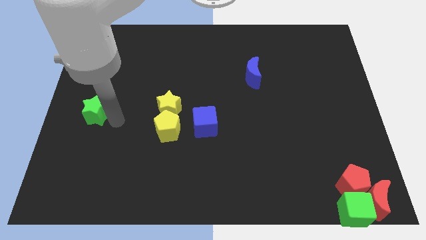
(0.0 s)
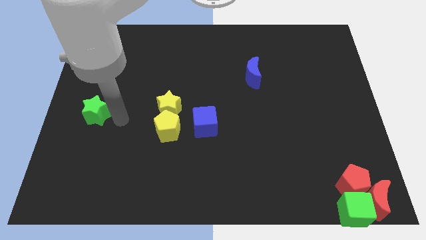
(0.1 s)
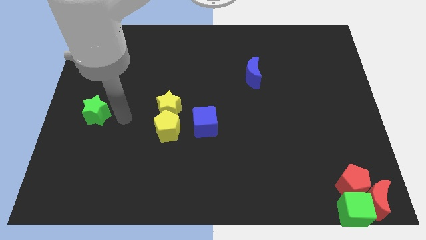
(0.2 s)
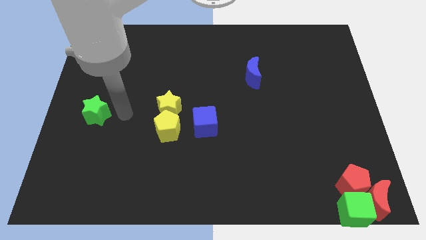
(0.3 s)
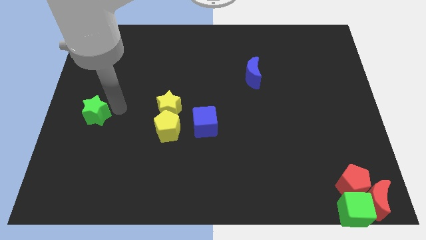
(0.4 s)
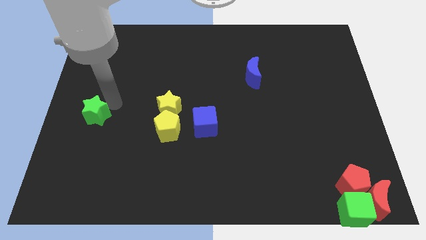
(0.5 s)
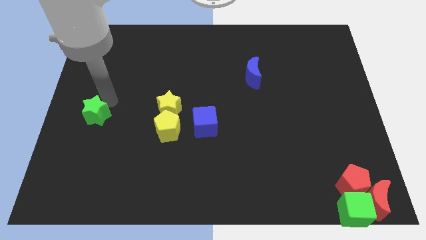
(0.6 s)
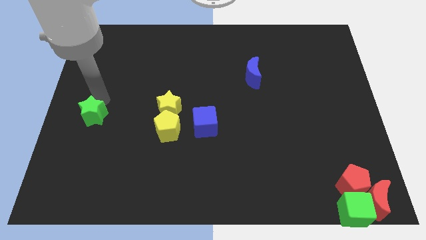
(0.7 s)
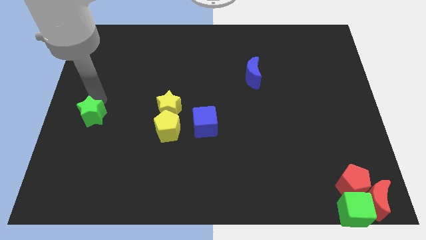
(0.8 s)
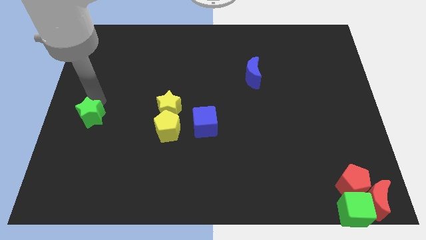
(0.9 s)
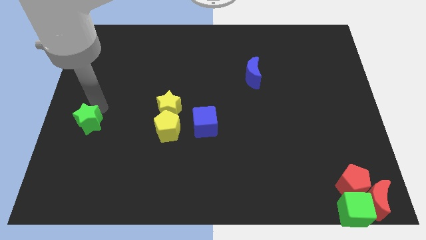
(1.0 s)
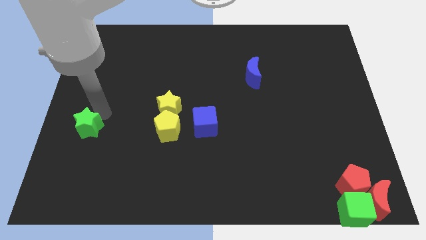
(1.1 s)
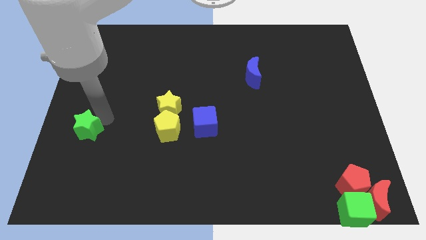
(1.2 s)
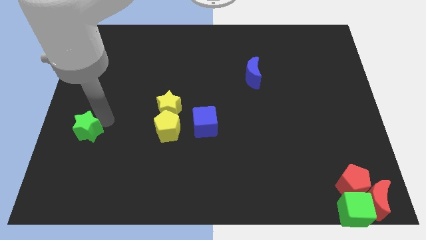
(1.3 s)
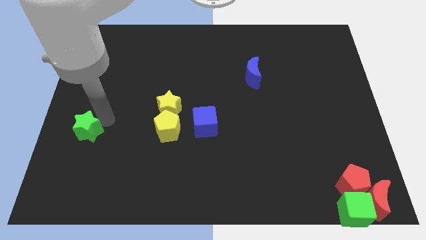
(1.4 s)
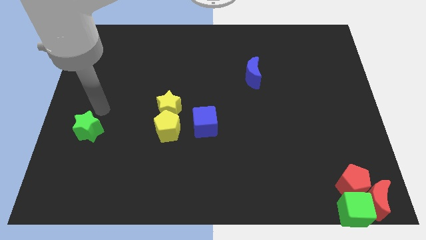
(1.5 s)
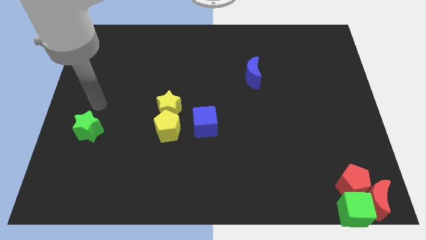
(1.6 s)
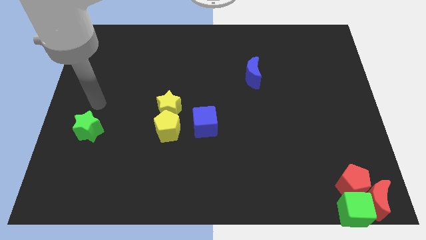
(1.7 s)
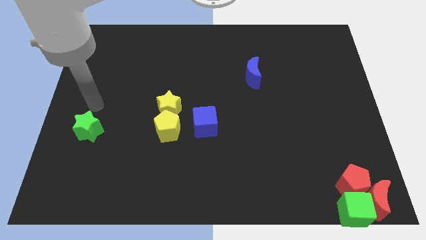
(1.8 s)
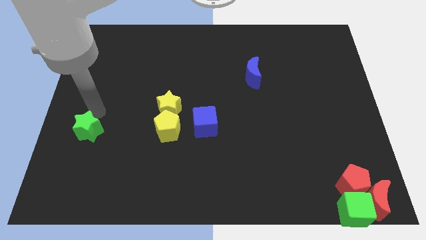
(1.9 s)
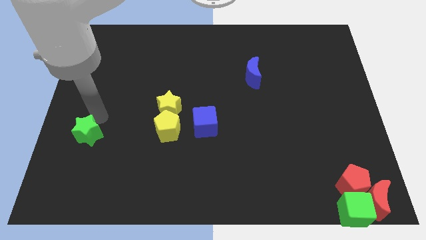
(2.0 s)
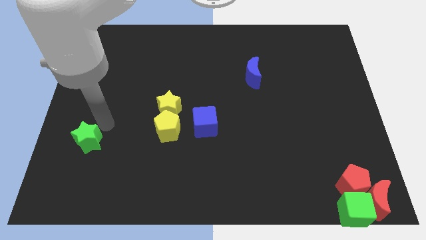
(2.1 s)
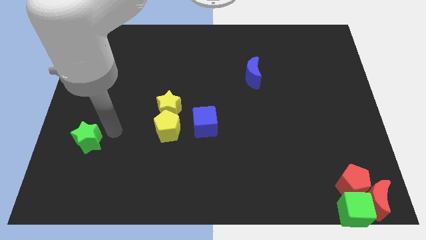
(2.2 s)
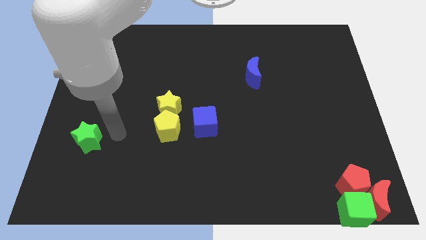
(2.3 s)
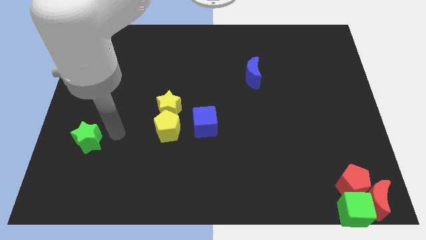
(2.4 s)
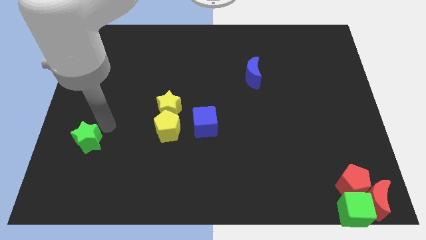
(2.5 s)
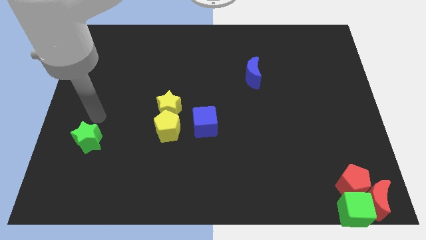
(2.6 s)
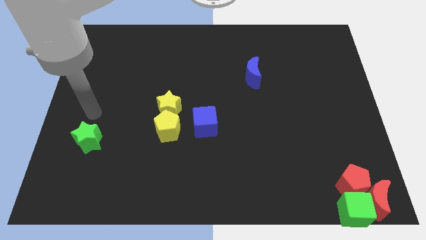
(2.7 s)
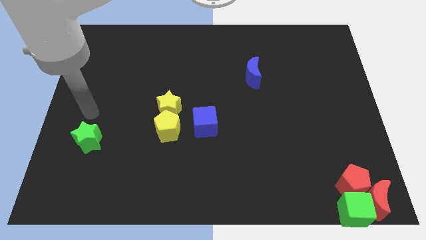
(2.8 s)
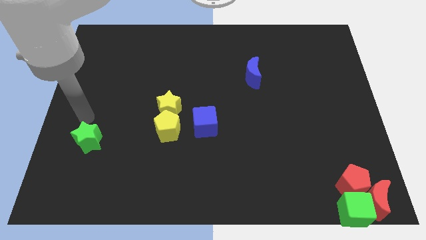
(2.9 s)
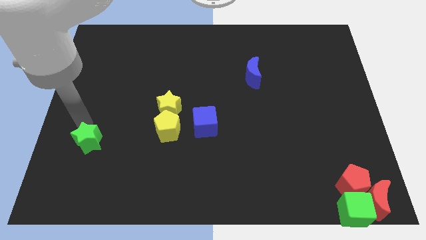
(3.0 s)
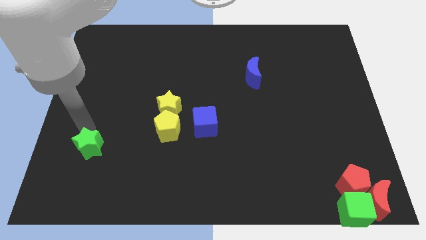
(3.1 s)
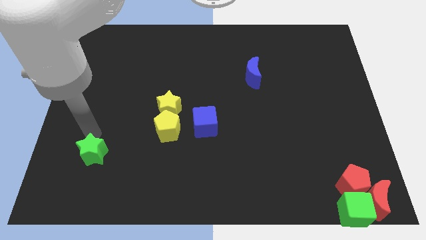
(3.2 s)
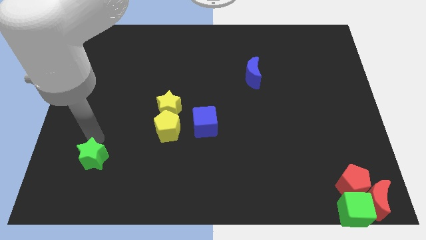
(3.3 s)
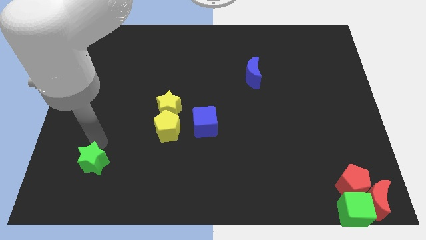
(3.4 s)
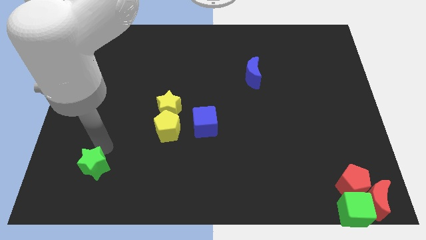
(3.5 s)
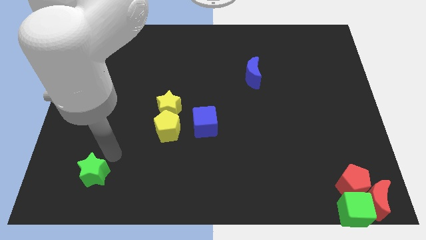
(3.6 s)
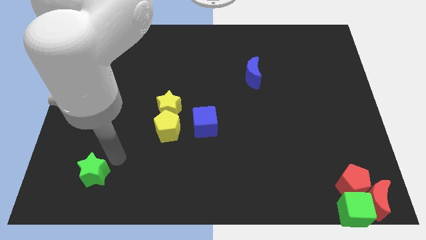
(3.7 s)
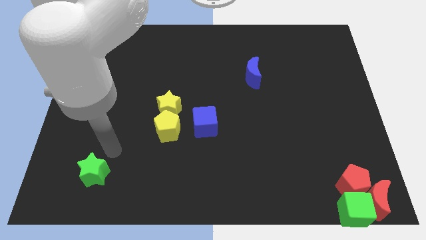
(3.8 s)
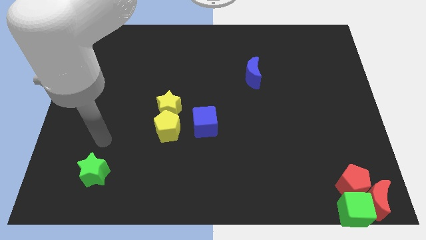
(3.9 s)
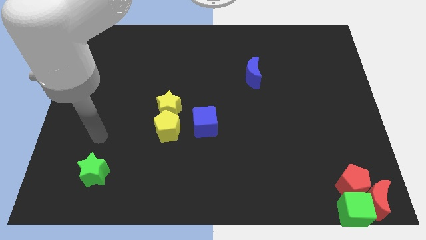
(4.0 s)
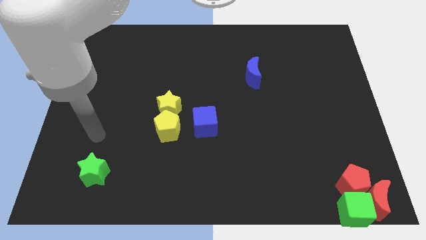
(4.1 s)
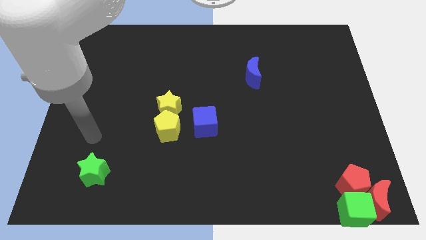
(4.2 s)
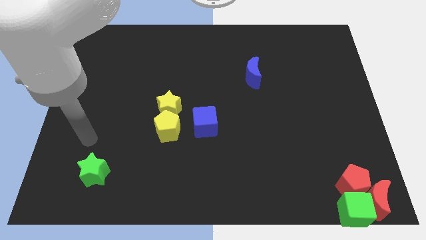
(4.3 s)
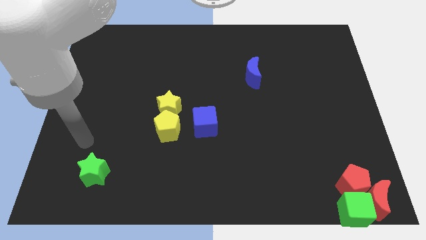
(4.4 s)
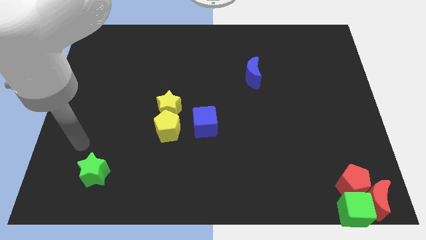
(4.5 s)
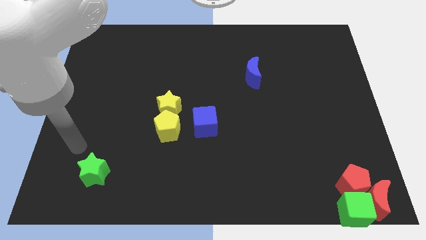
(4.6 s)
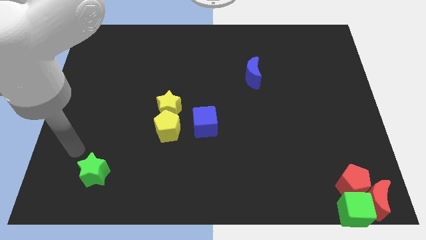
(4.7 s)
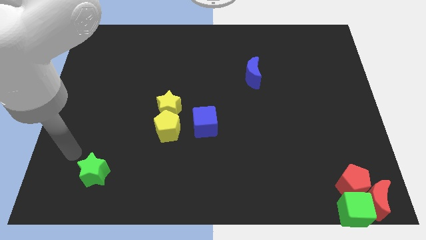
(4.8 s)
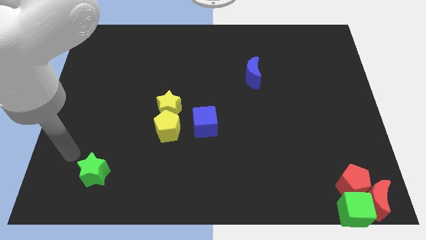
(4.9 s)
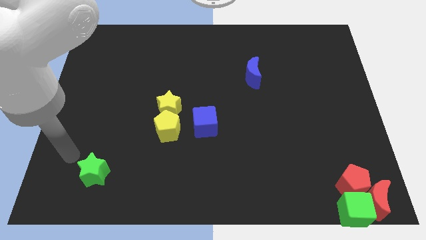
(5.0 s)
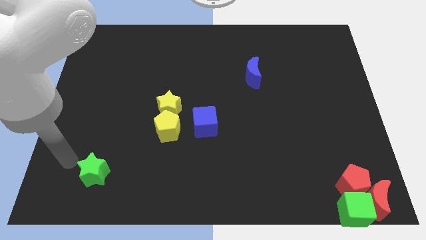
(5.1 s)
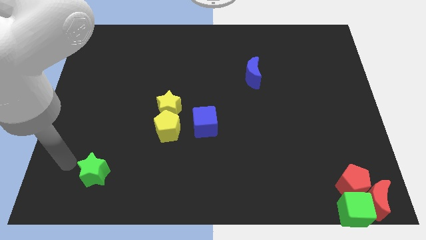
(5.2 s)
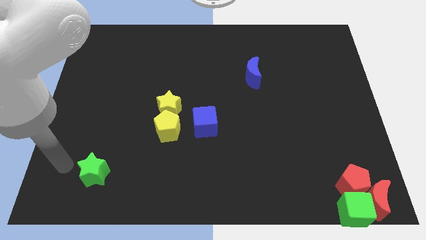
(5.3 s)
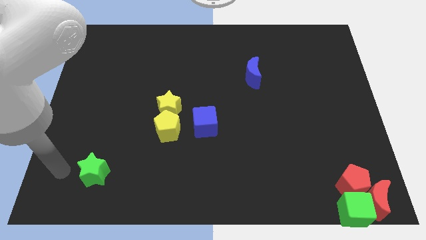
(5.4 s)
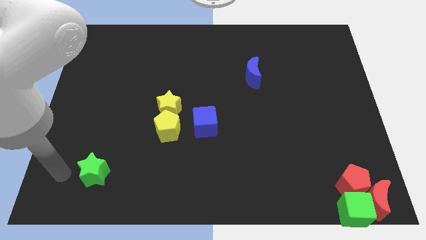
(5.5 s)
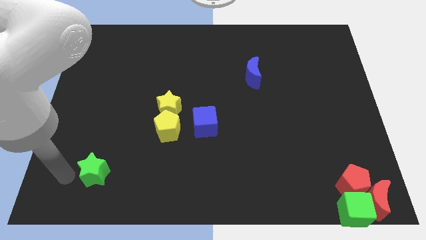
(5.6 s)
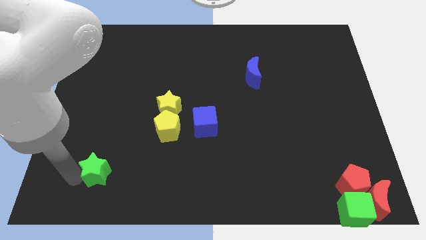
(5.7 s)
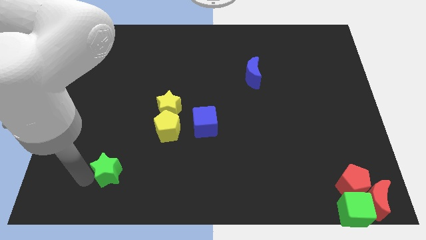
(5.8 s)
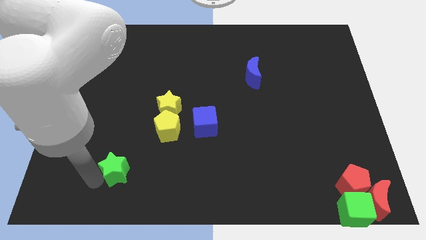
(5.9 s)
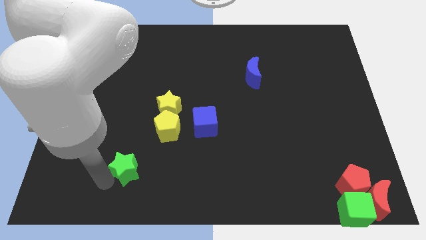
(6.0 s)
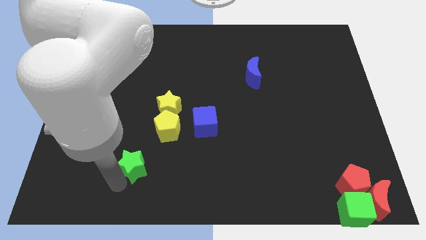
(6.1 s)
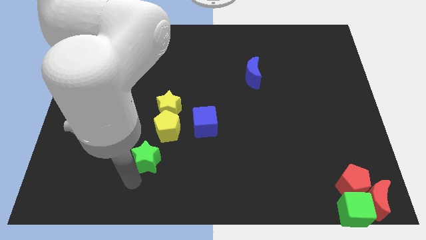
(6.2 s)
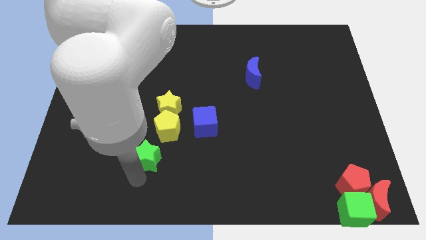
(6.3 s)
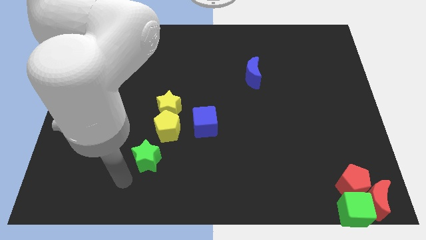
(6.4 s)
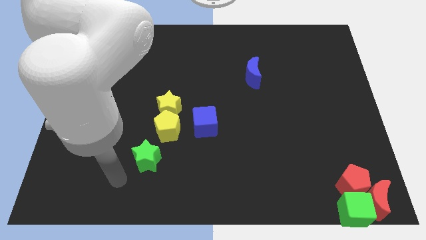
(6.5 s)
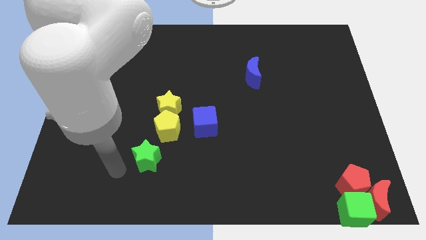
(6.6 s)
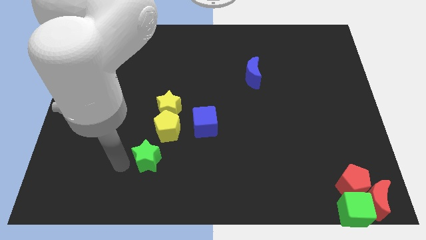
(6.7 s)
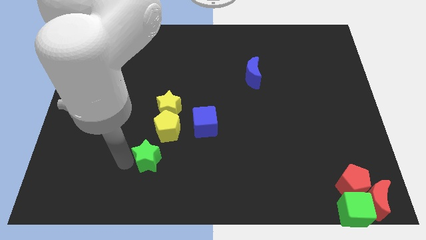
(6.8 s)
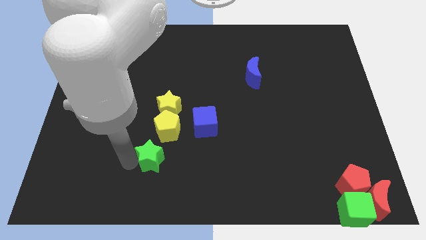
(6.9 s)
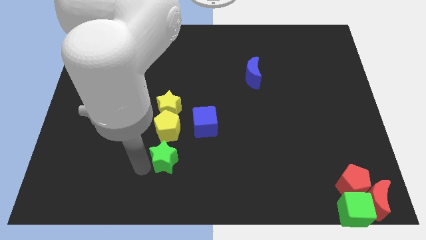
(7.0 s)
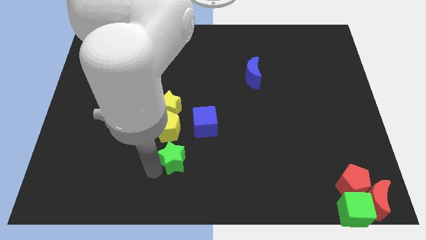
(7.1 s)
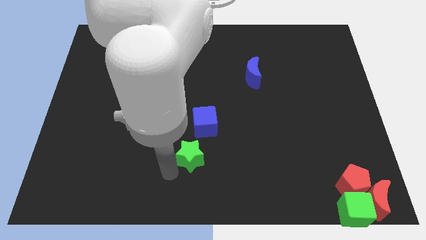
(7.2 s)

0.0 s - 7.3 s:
move green star left below the blue cube

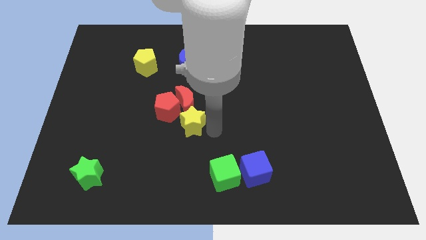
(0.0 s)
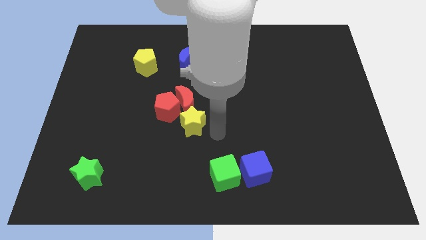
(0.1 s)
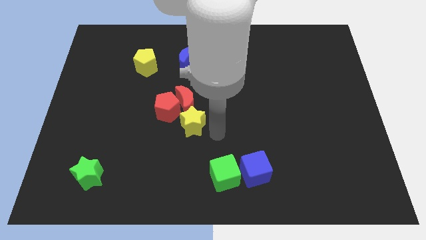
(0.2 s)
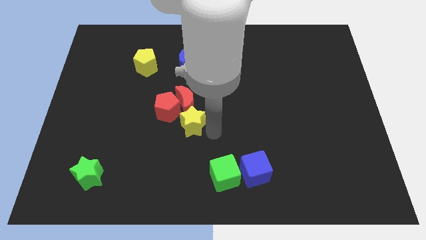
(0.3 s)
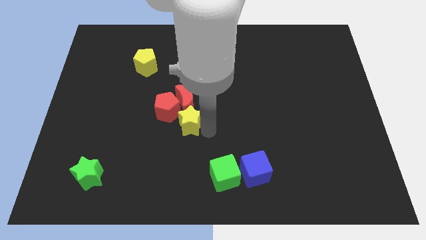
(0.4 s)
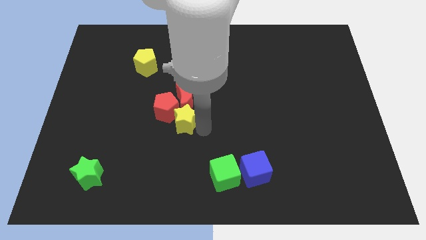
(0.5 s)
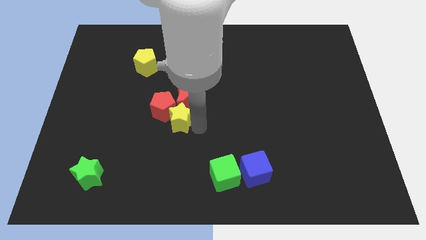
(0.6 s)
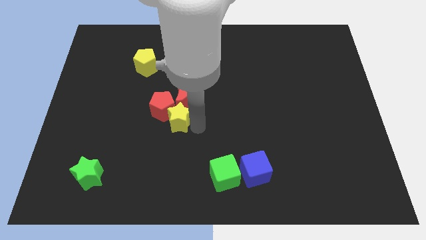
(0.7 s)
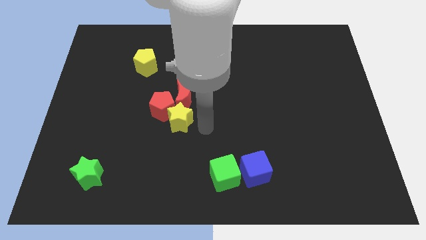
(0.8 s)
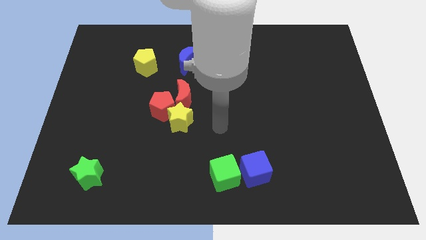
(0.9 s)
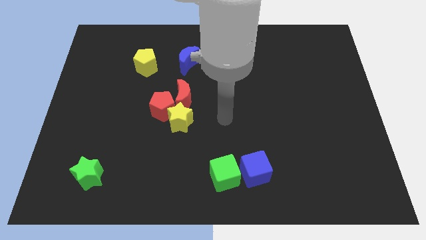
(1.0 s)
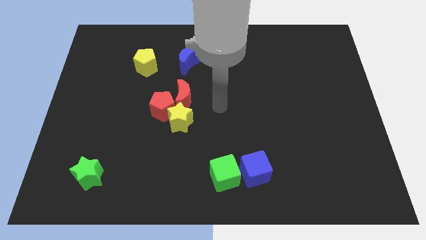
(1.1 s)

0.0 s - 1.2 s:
push yellow star into the red blocks

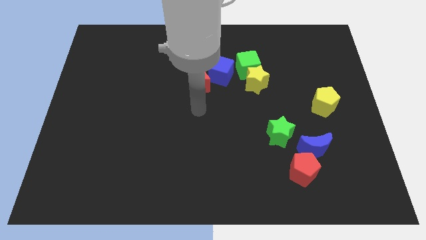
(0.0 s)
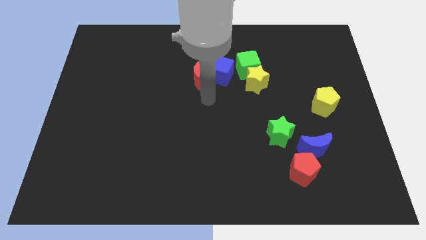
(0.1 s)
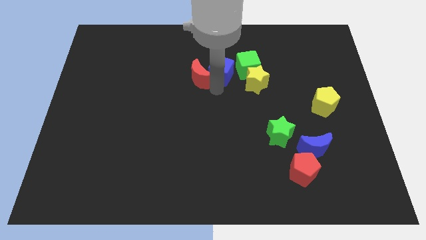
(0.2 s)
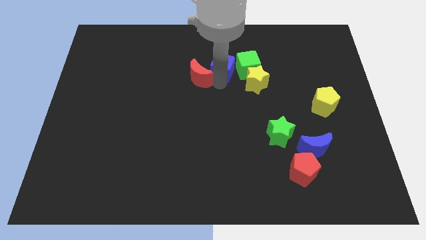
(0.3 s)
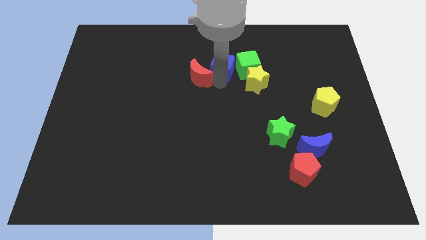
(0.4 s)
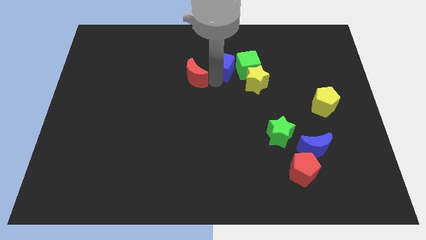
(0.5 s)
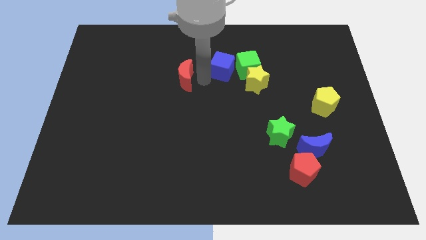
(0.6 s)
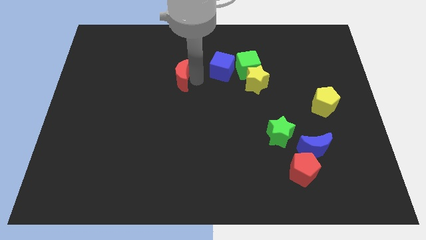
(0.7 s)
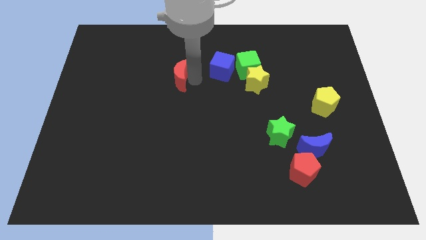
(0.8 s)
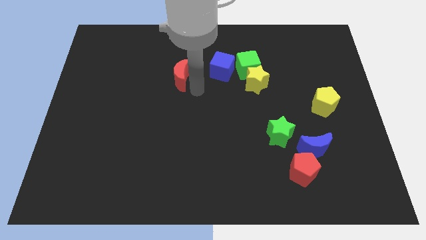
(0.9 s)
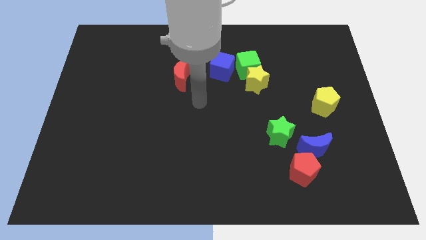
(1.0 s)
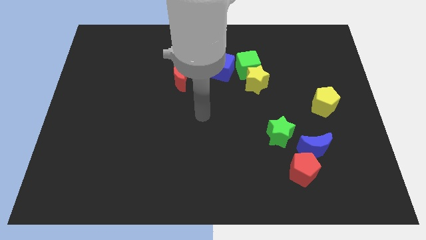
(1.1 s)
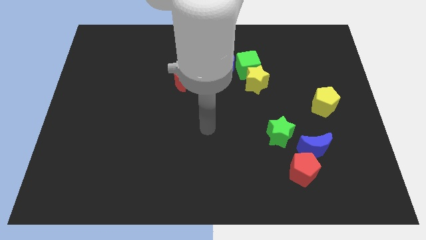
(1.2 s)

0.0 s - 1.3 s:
separate the red crescent with the blue cube
